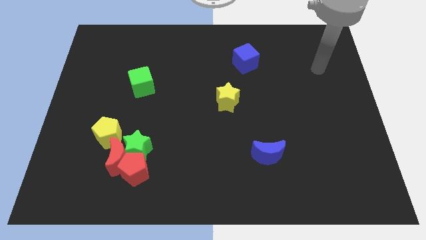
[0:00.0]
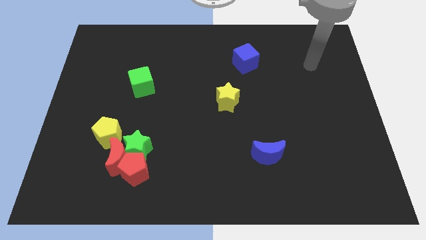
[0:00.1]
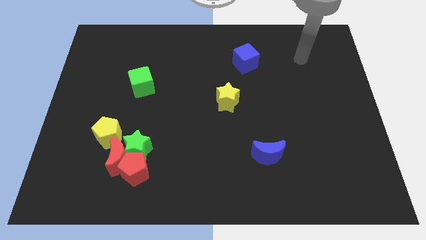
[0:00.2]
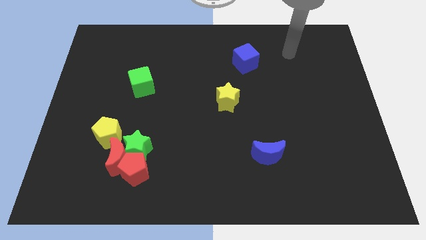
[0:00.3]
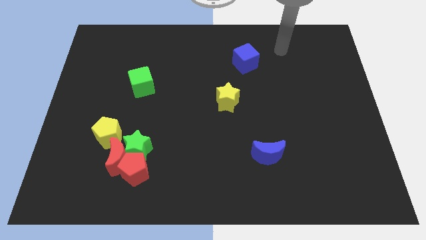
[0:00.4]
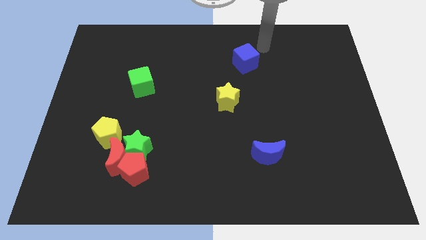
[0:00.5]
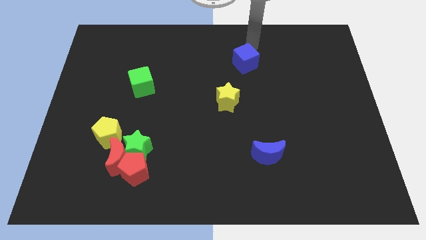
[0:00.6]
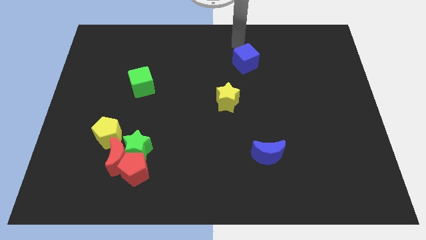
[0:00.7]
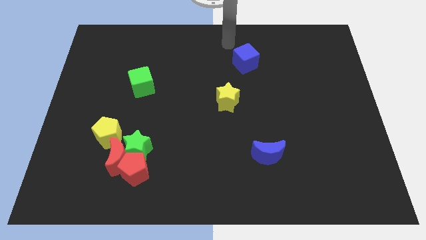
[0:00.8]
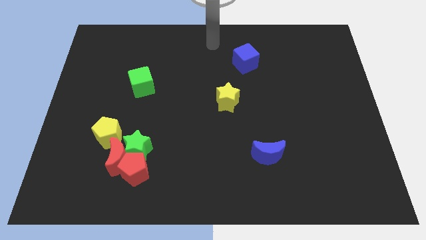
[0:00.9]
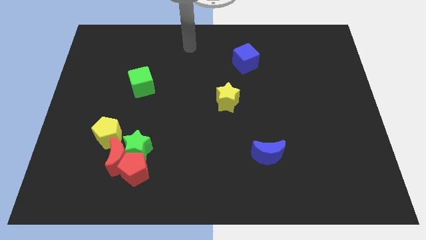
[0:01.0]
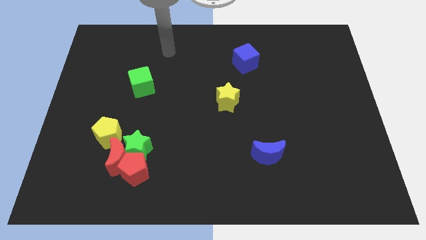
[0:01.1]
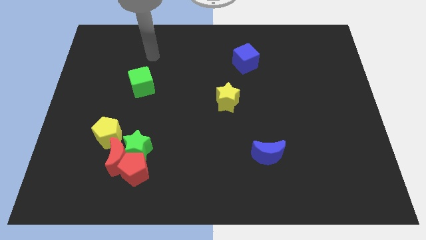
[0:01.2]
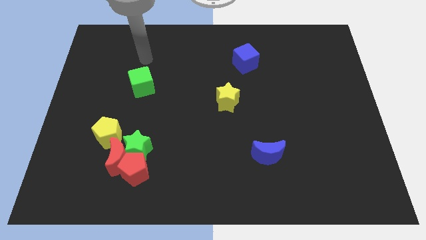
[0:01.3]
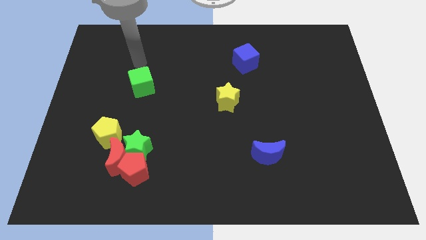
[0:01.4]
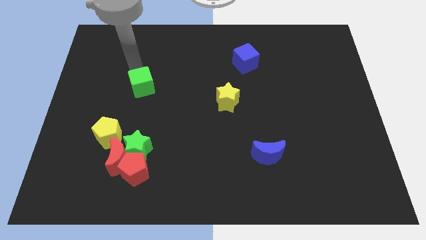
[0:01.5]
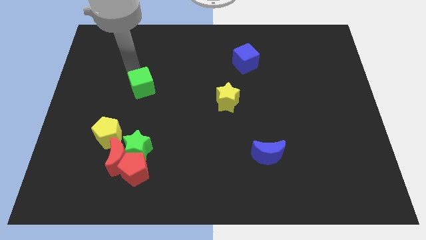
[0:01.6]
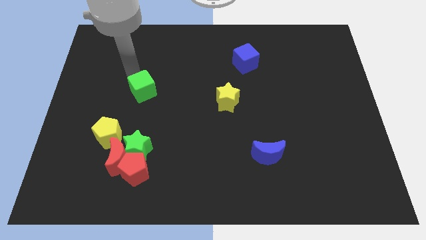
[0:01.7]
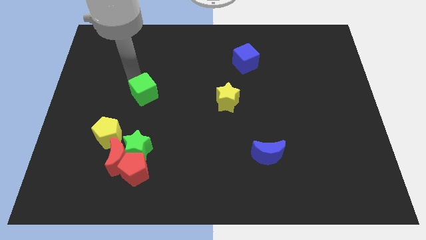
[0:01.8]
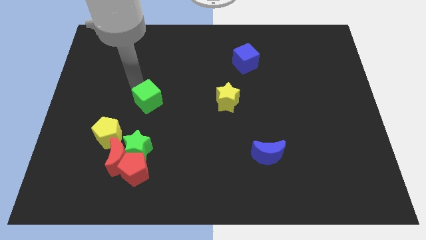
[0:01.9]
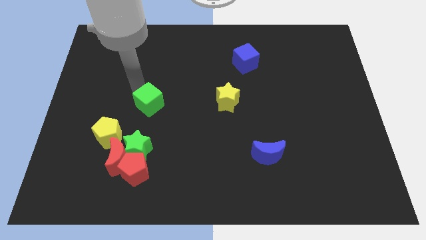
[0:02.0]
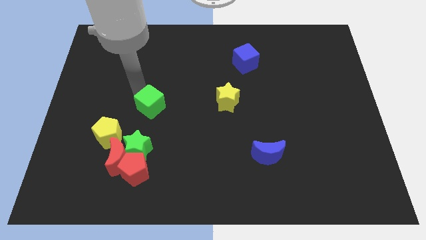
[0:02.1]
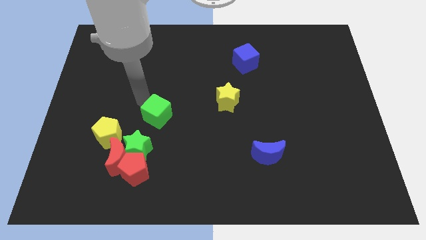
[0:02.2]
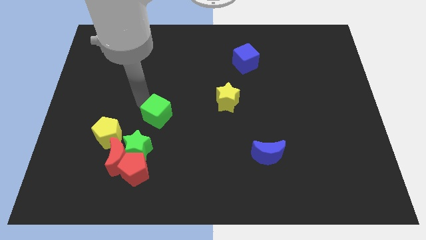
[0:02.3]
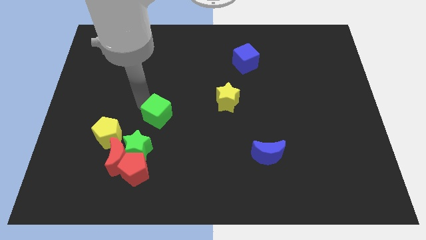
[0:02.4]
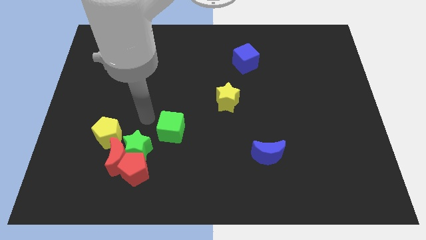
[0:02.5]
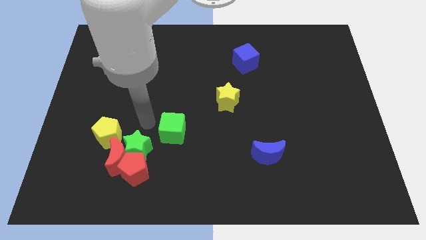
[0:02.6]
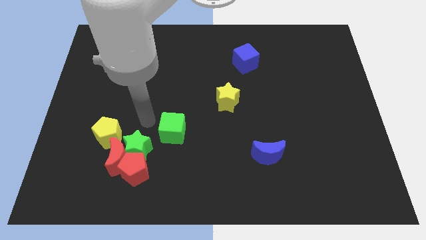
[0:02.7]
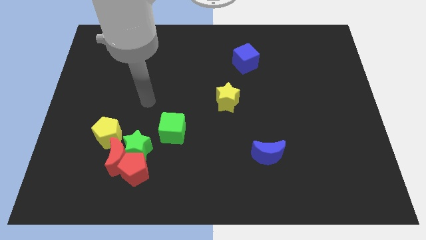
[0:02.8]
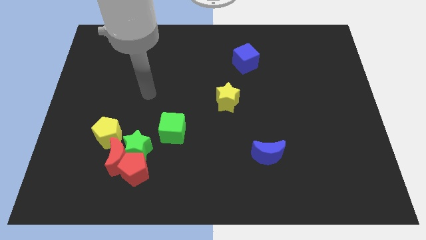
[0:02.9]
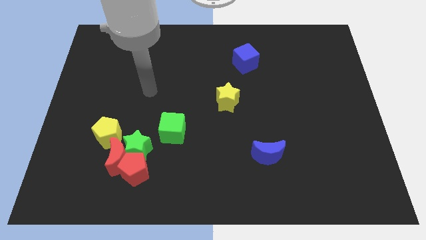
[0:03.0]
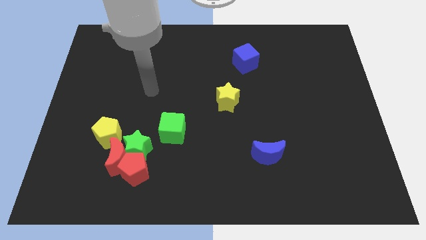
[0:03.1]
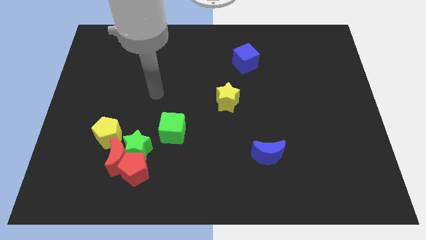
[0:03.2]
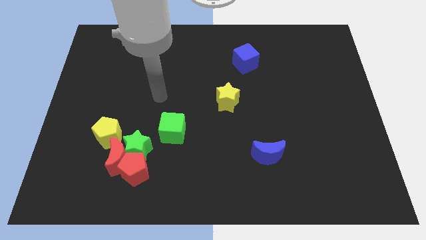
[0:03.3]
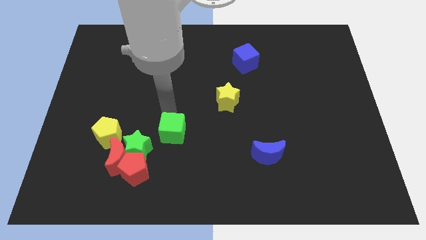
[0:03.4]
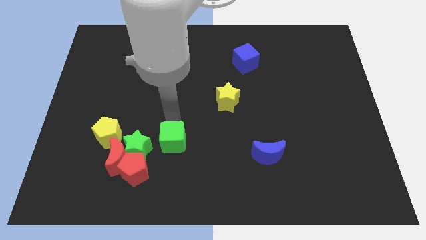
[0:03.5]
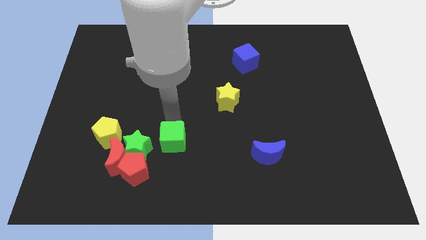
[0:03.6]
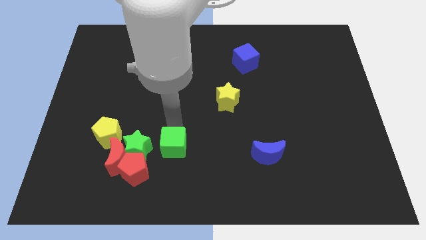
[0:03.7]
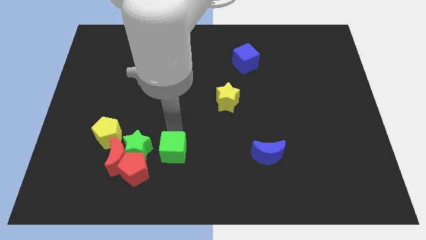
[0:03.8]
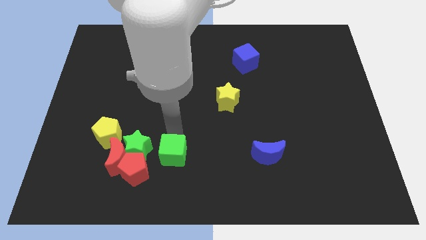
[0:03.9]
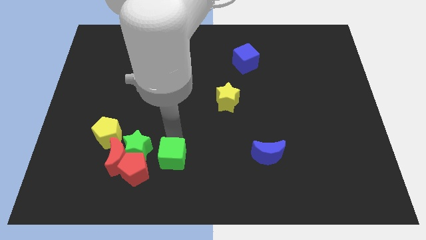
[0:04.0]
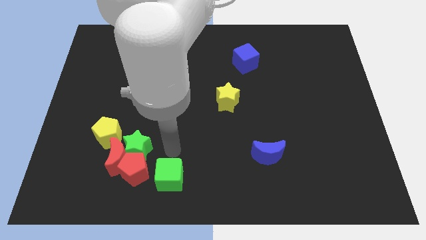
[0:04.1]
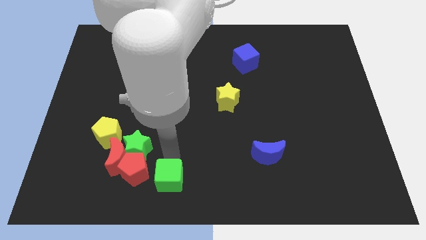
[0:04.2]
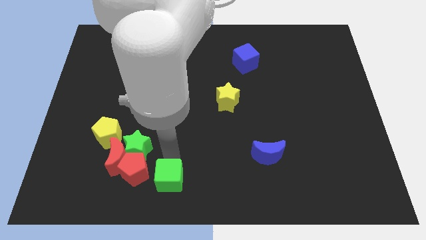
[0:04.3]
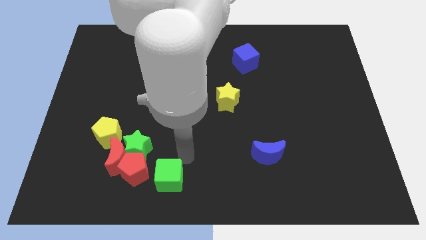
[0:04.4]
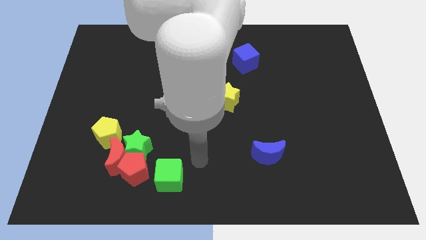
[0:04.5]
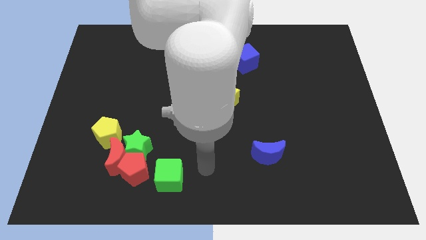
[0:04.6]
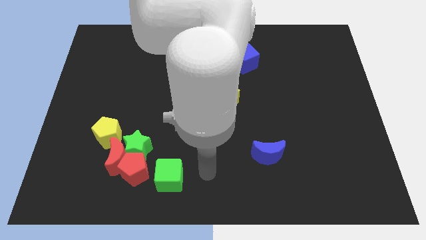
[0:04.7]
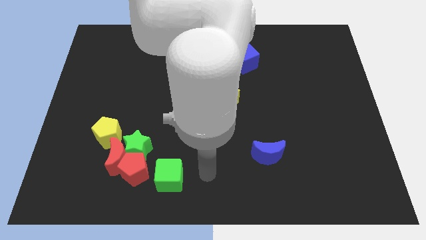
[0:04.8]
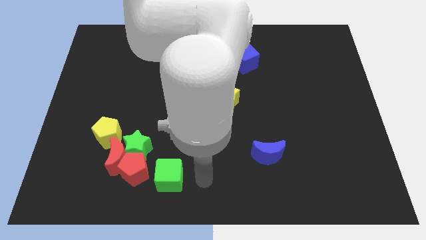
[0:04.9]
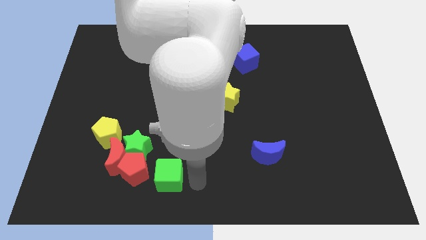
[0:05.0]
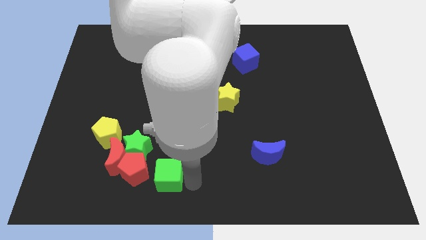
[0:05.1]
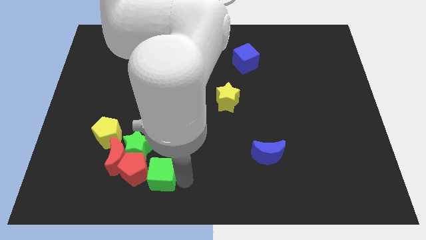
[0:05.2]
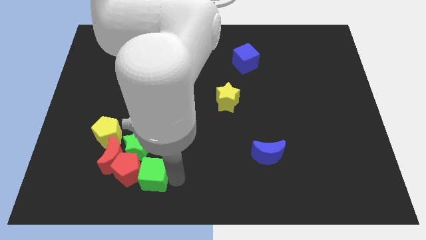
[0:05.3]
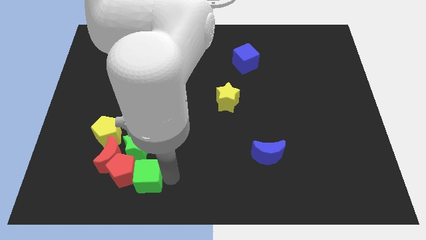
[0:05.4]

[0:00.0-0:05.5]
push the green cube to the red pentagon

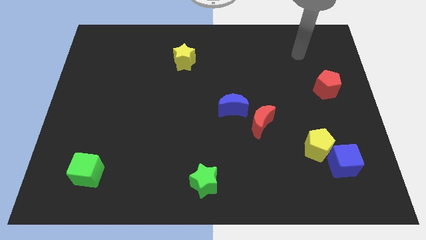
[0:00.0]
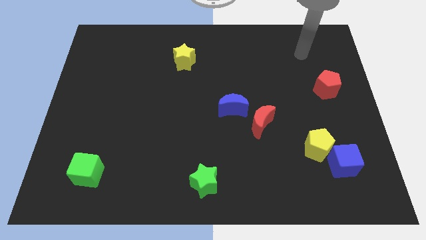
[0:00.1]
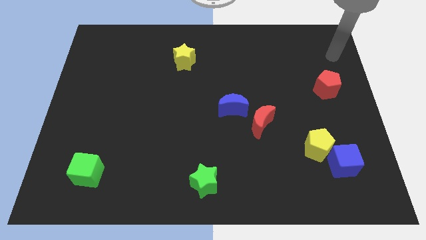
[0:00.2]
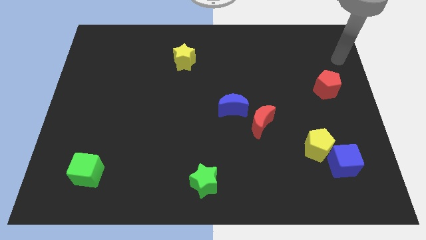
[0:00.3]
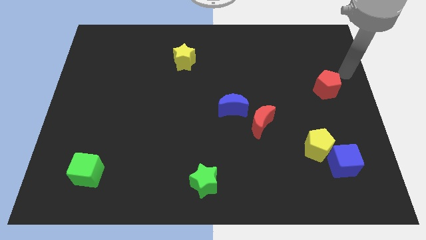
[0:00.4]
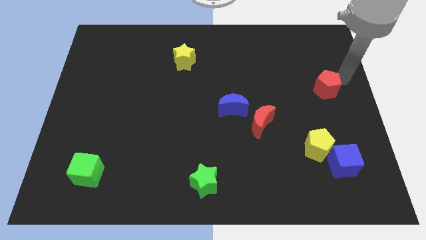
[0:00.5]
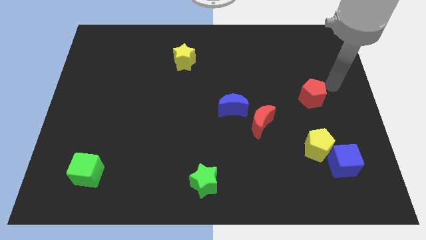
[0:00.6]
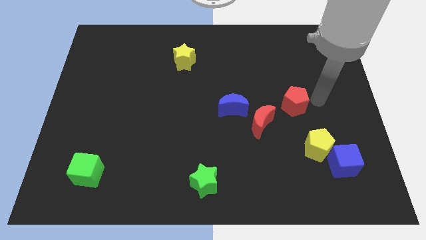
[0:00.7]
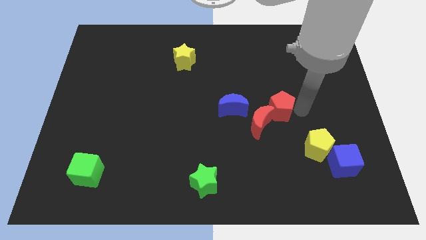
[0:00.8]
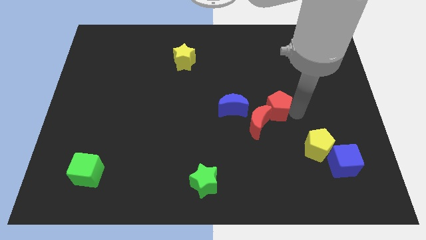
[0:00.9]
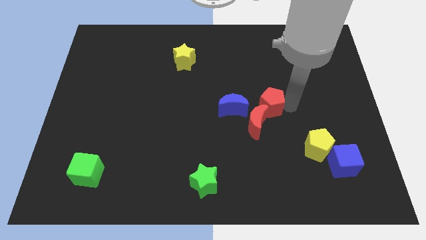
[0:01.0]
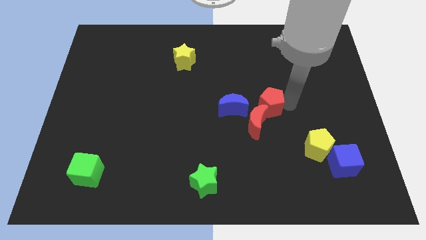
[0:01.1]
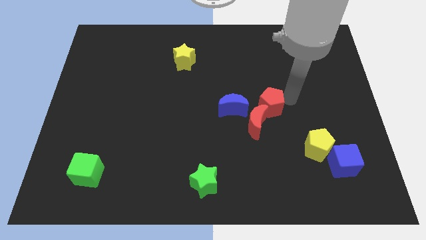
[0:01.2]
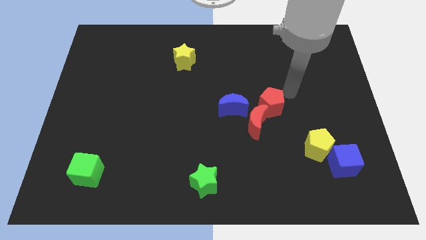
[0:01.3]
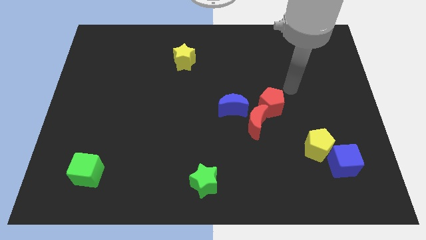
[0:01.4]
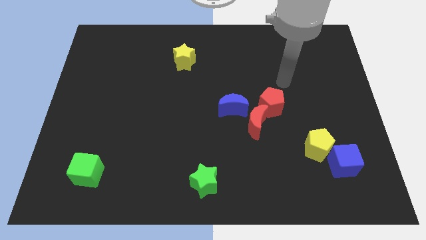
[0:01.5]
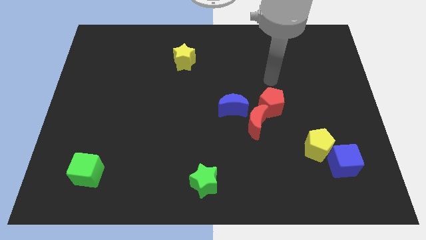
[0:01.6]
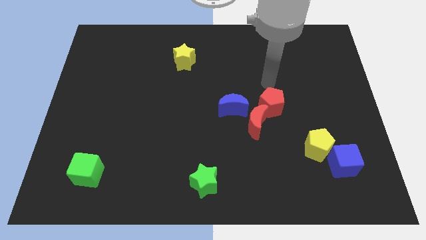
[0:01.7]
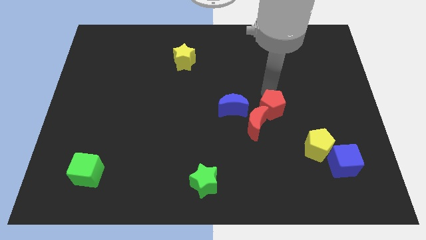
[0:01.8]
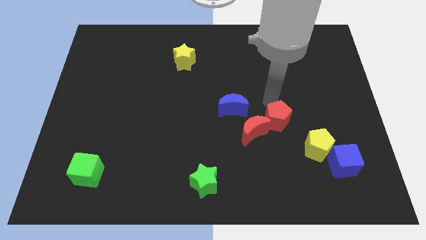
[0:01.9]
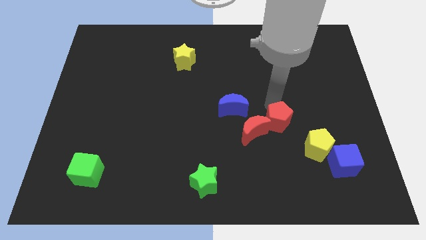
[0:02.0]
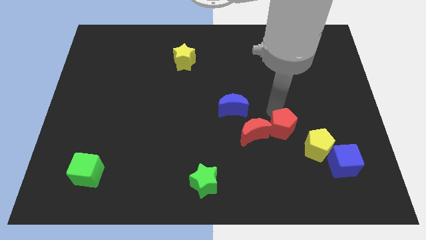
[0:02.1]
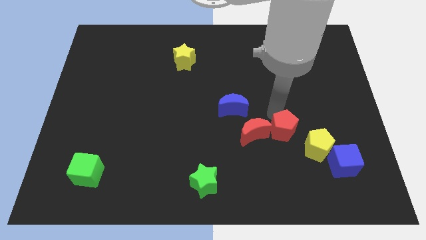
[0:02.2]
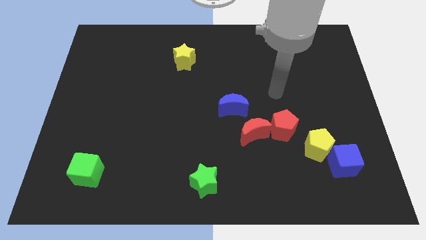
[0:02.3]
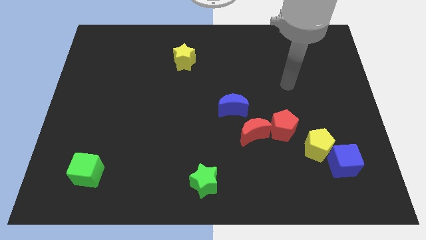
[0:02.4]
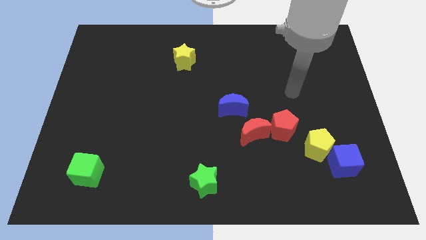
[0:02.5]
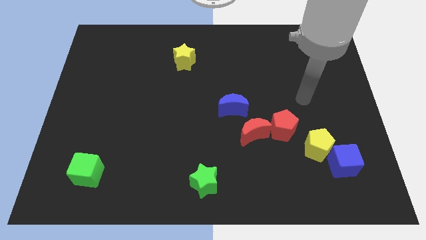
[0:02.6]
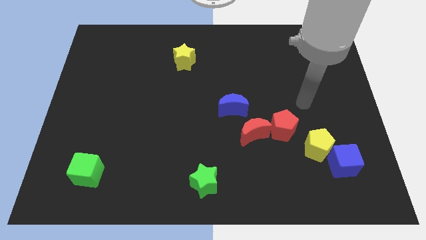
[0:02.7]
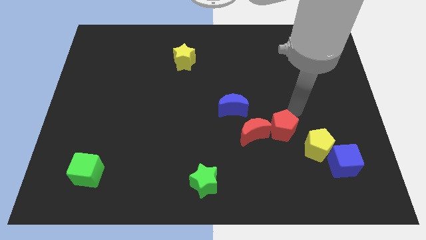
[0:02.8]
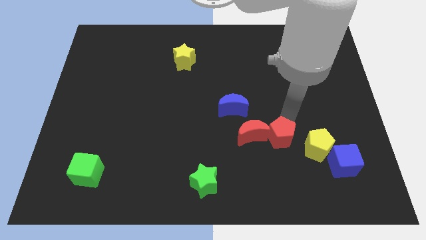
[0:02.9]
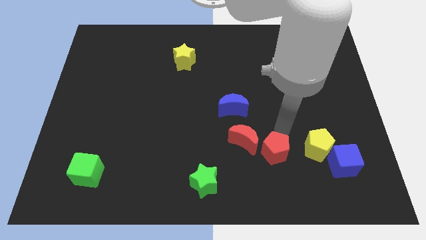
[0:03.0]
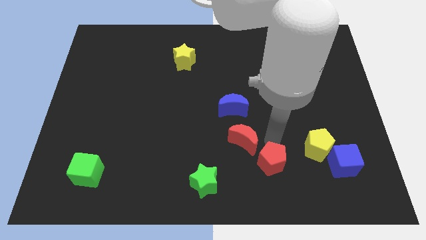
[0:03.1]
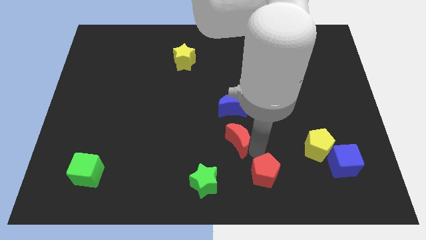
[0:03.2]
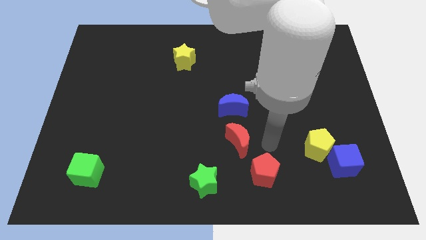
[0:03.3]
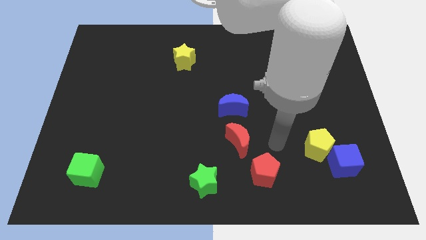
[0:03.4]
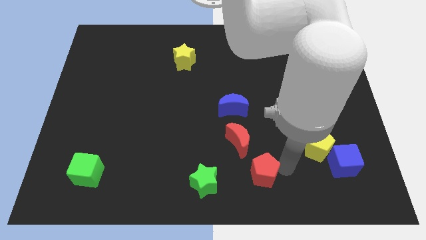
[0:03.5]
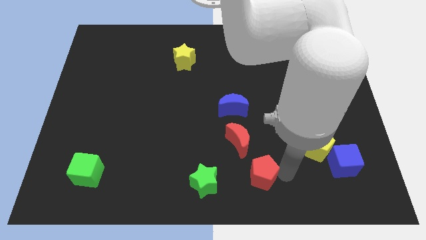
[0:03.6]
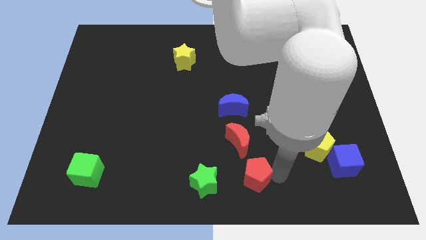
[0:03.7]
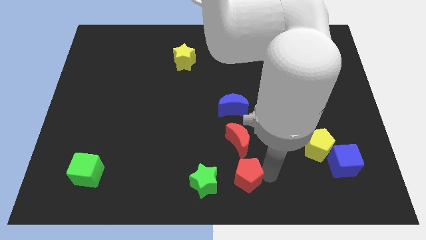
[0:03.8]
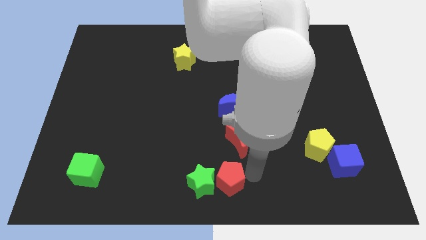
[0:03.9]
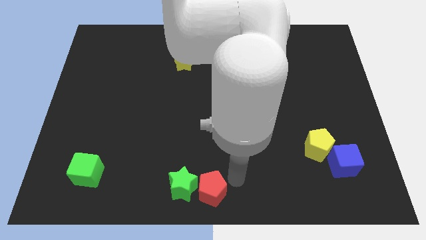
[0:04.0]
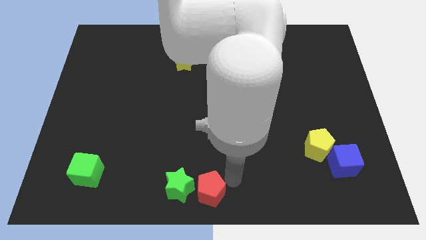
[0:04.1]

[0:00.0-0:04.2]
move the red pentagon close to the green star
